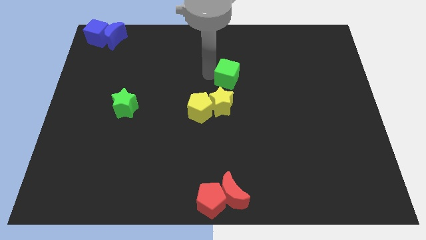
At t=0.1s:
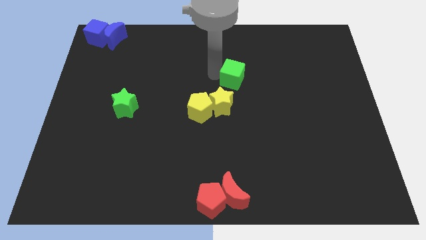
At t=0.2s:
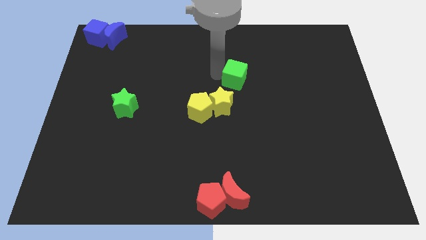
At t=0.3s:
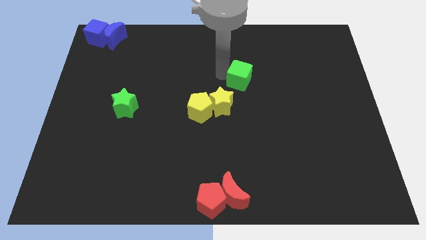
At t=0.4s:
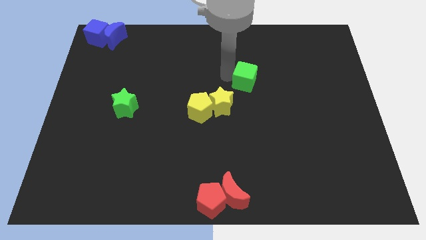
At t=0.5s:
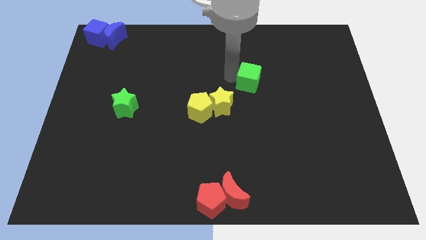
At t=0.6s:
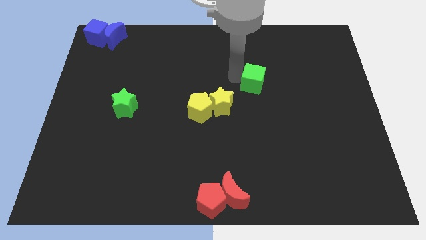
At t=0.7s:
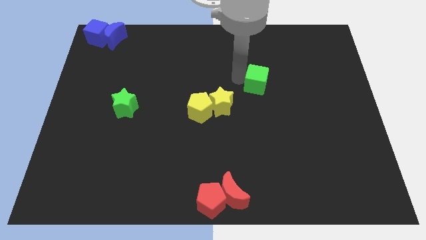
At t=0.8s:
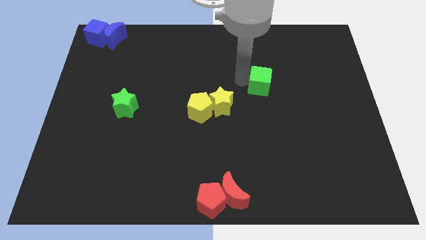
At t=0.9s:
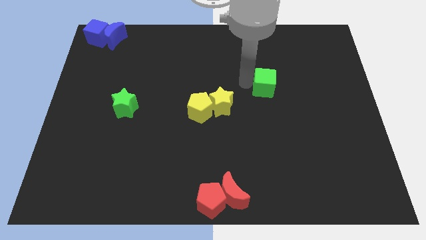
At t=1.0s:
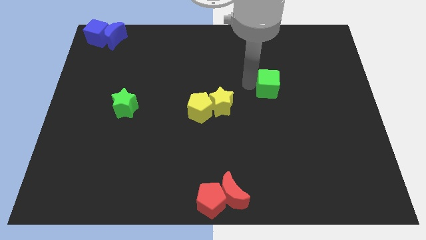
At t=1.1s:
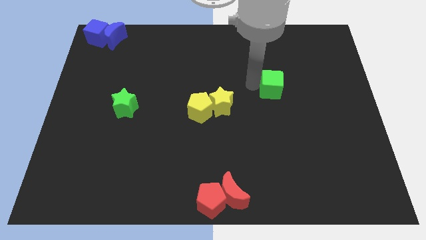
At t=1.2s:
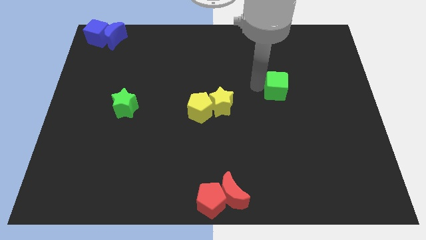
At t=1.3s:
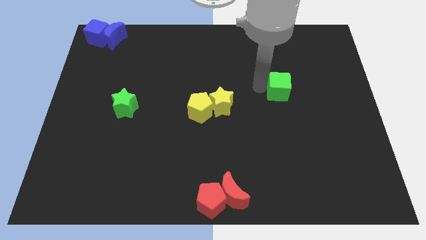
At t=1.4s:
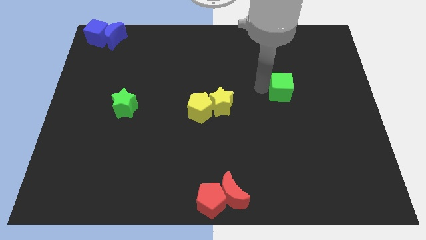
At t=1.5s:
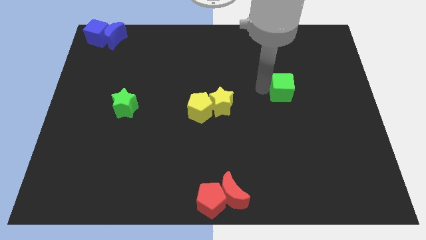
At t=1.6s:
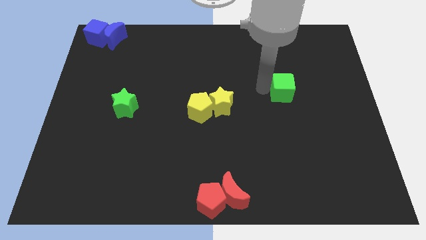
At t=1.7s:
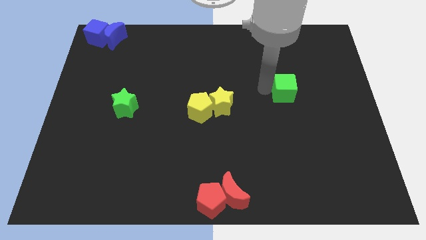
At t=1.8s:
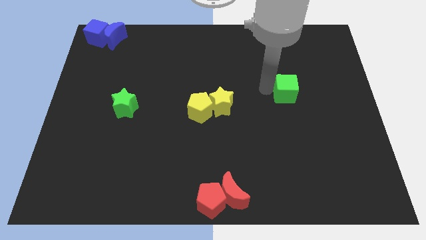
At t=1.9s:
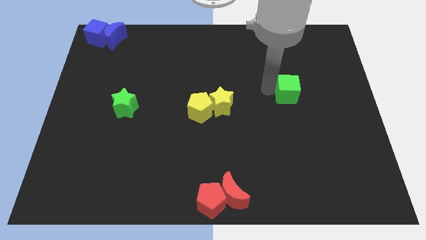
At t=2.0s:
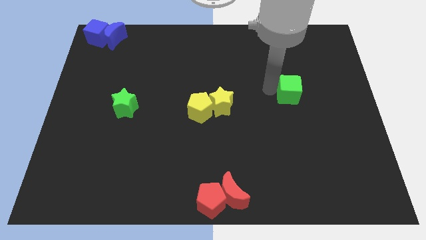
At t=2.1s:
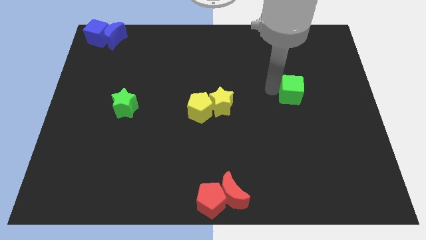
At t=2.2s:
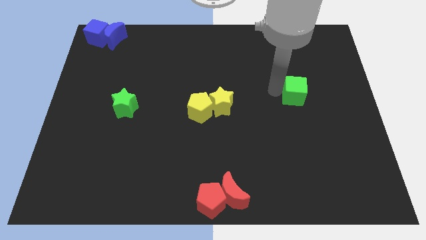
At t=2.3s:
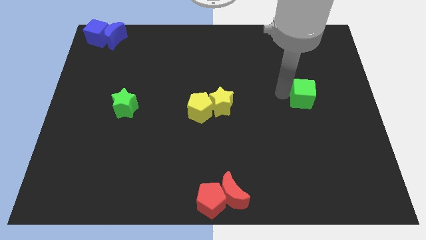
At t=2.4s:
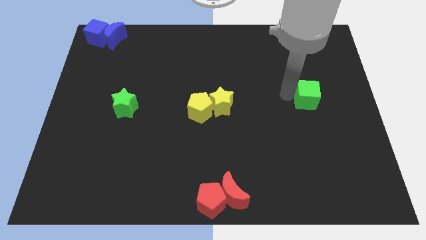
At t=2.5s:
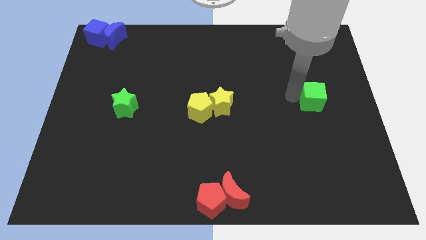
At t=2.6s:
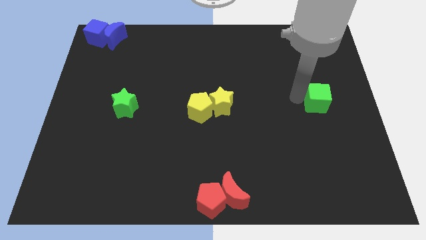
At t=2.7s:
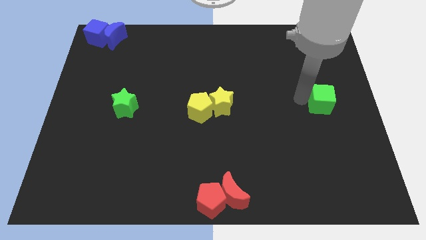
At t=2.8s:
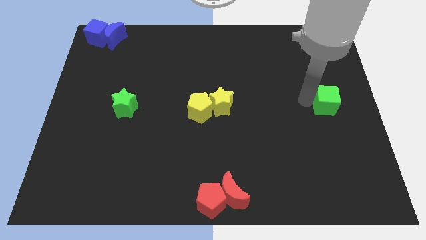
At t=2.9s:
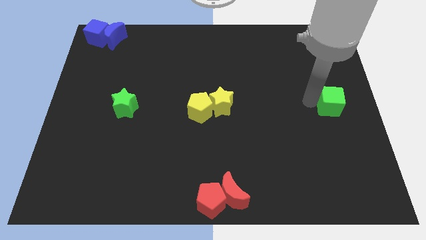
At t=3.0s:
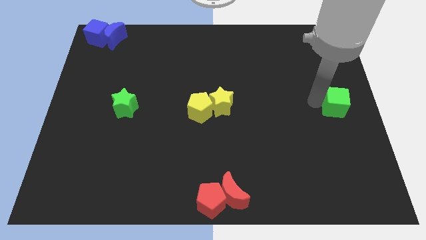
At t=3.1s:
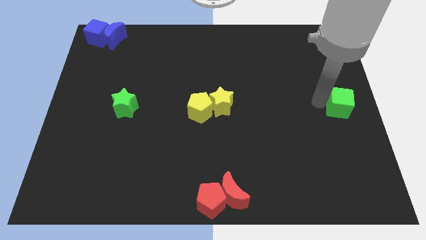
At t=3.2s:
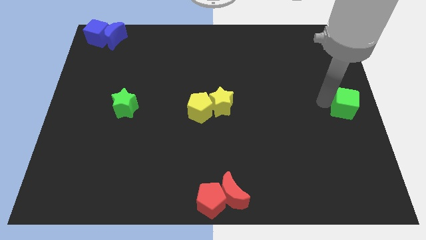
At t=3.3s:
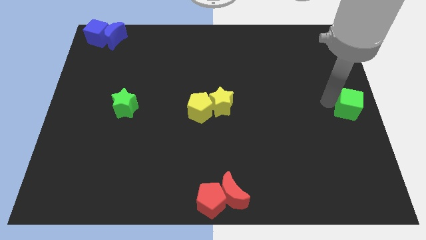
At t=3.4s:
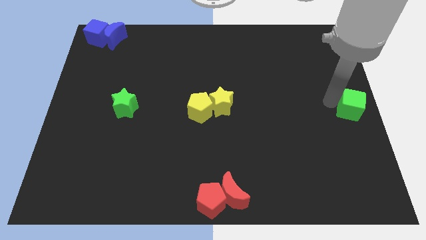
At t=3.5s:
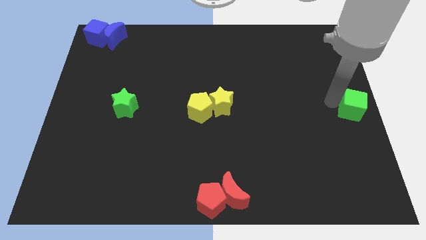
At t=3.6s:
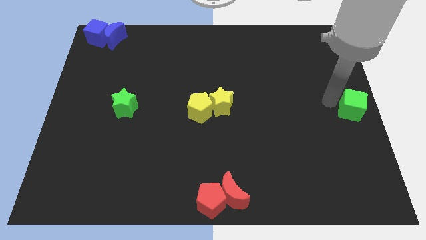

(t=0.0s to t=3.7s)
move the green cube to the right center of the board

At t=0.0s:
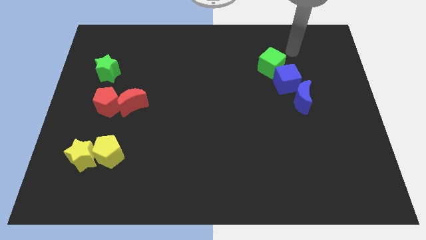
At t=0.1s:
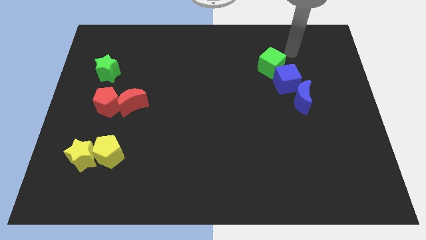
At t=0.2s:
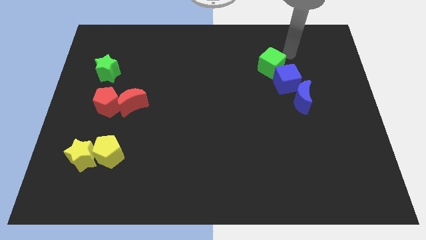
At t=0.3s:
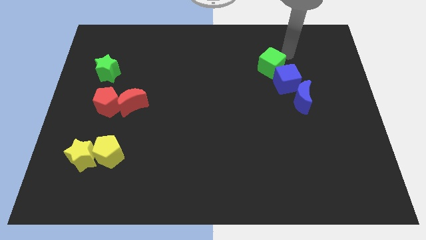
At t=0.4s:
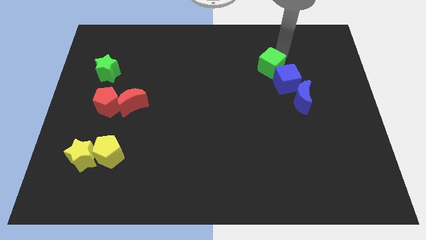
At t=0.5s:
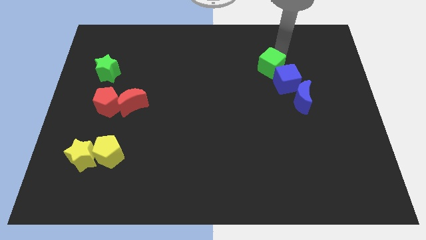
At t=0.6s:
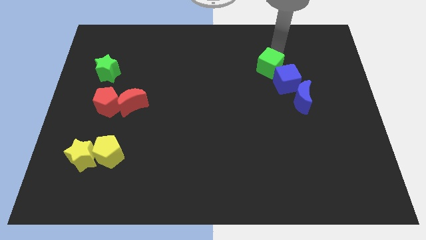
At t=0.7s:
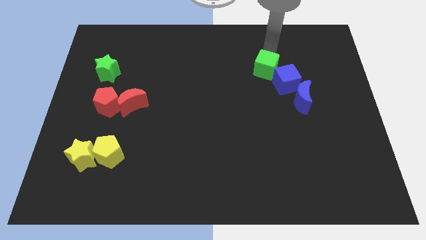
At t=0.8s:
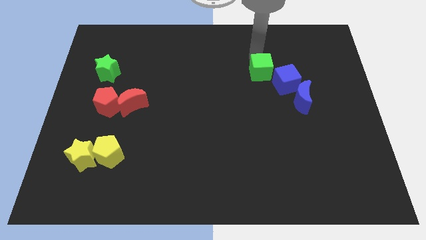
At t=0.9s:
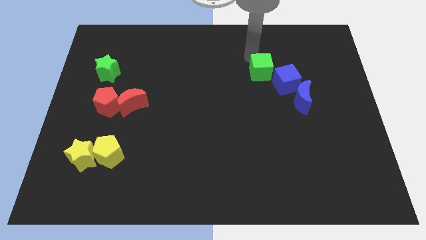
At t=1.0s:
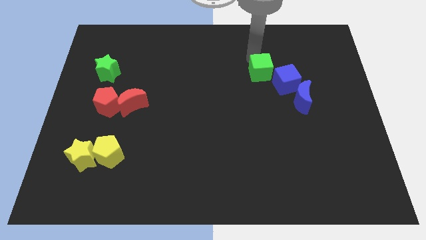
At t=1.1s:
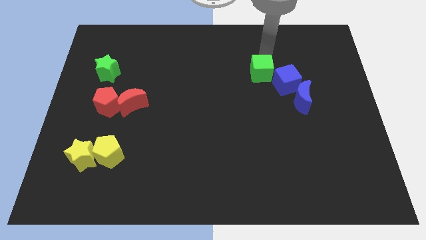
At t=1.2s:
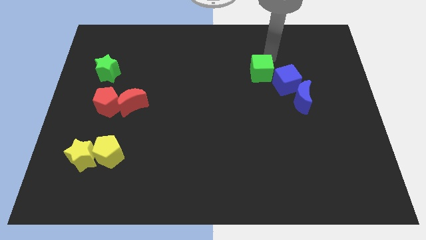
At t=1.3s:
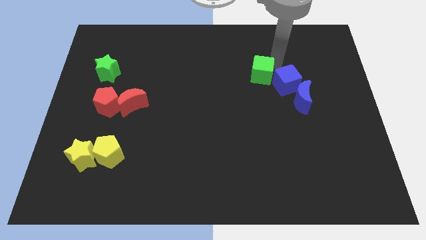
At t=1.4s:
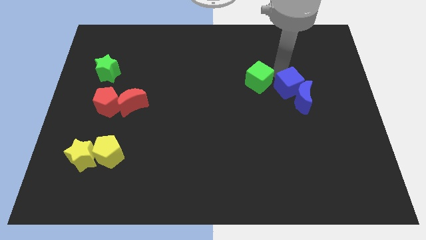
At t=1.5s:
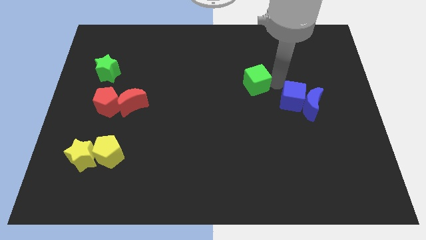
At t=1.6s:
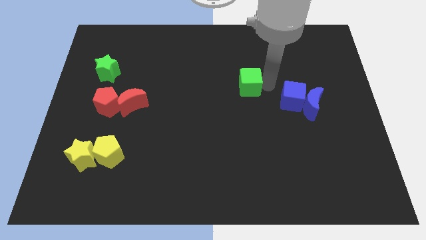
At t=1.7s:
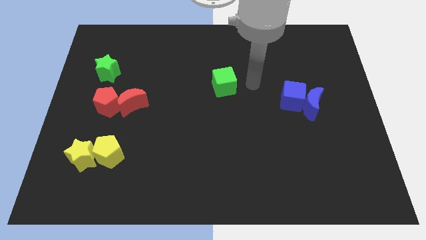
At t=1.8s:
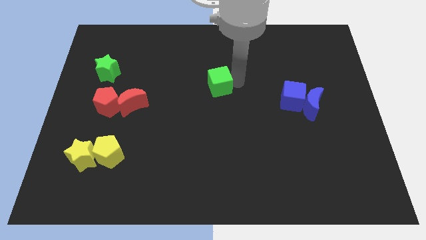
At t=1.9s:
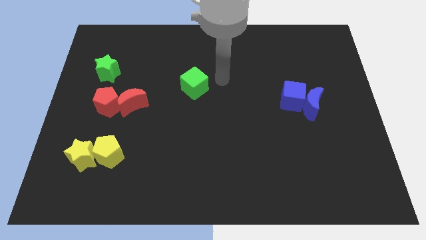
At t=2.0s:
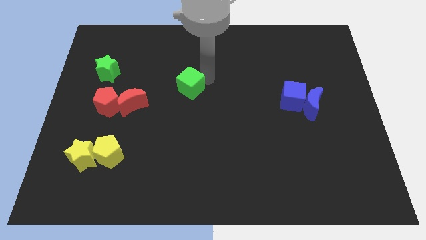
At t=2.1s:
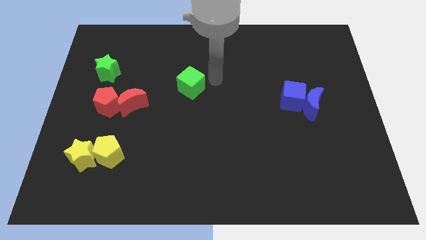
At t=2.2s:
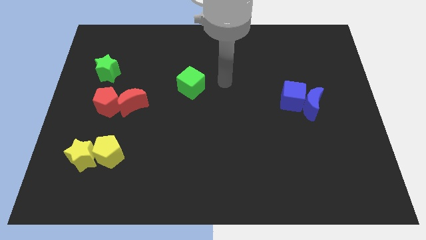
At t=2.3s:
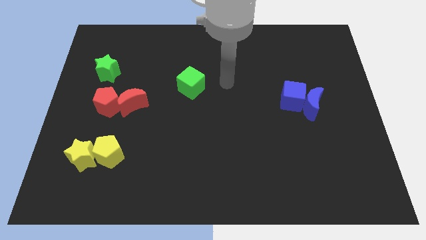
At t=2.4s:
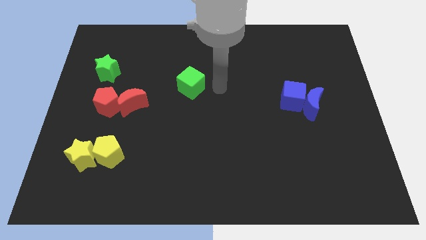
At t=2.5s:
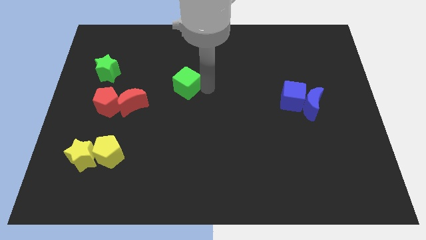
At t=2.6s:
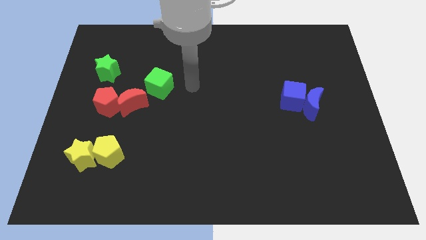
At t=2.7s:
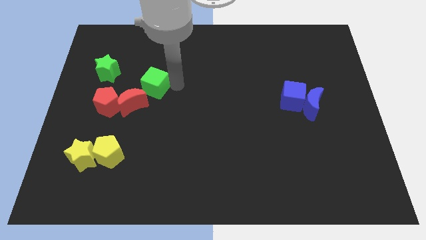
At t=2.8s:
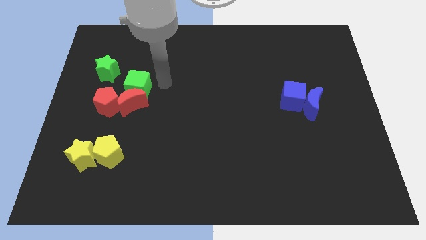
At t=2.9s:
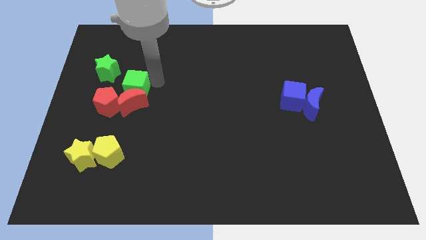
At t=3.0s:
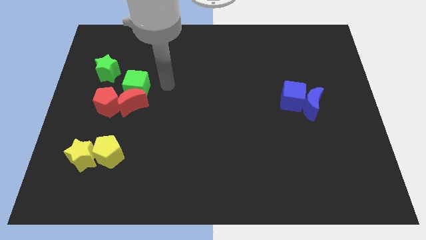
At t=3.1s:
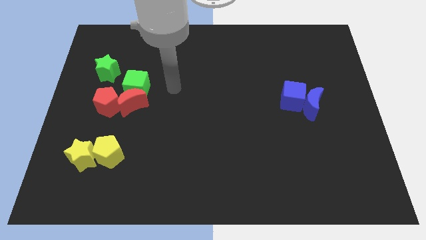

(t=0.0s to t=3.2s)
put the green cube at the top of the red crescent

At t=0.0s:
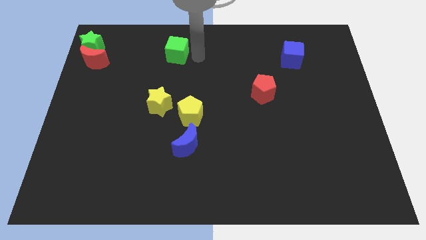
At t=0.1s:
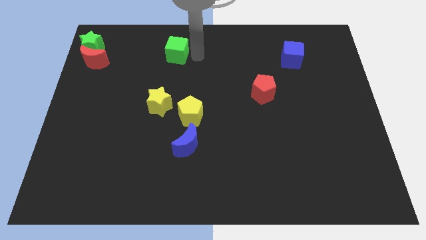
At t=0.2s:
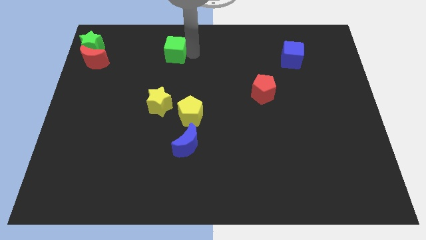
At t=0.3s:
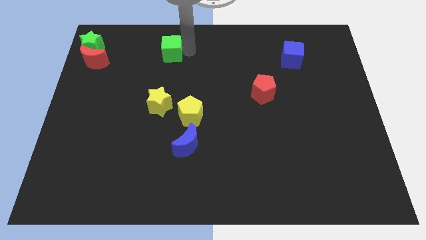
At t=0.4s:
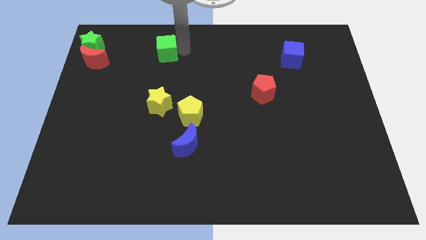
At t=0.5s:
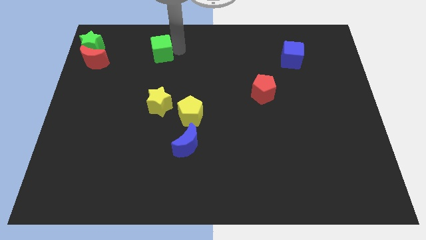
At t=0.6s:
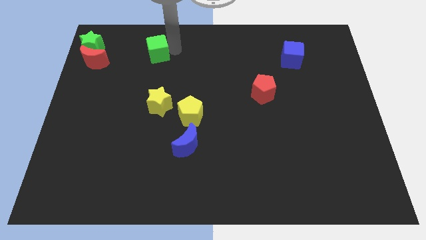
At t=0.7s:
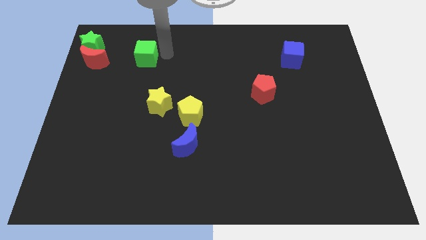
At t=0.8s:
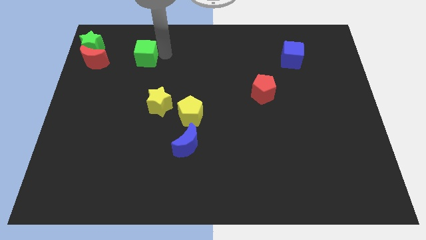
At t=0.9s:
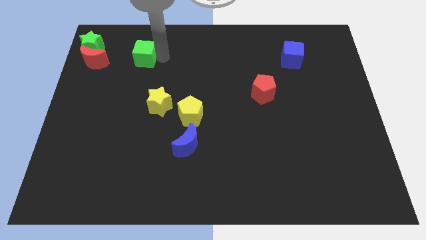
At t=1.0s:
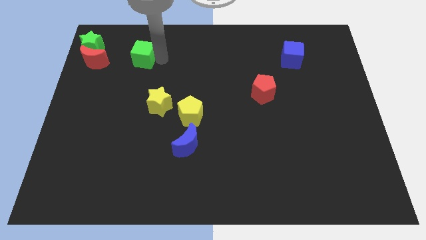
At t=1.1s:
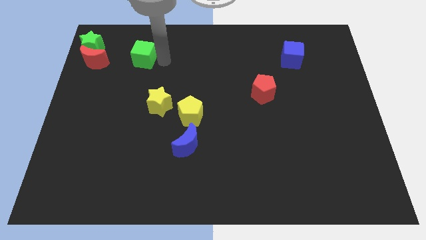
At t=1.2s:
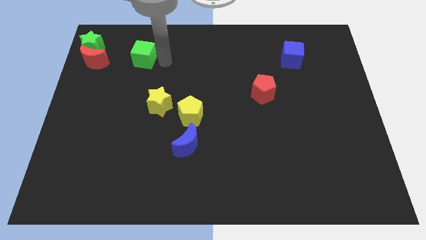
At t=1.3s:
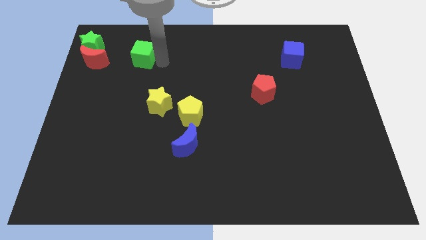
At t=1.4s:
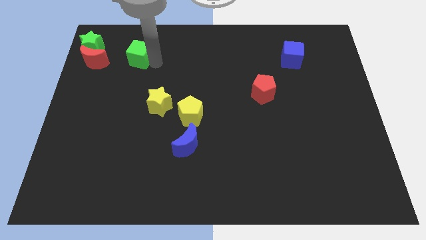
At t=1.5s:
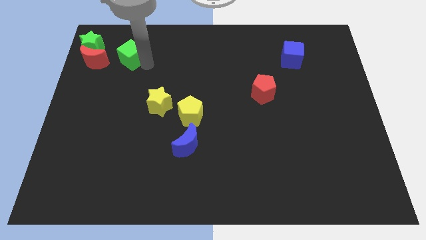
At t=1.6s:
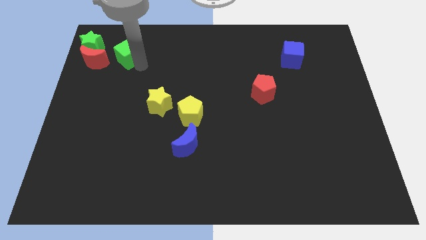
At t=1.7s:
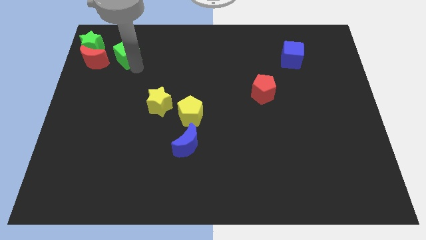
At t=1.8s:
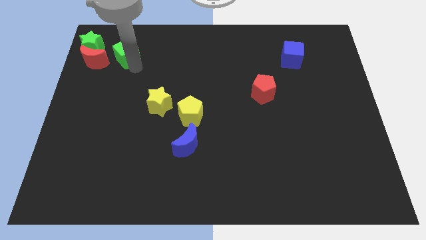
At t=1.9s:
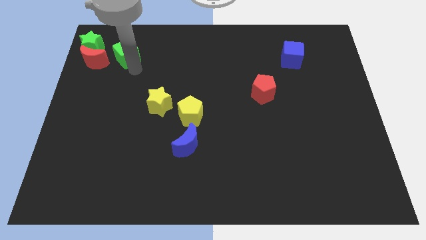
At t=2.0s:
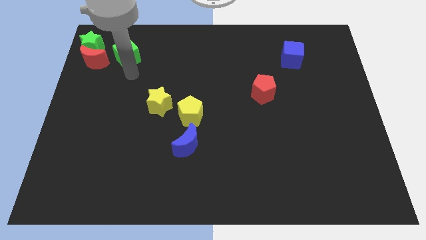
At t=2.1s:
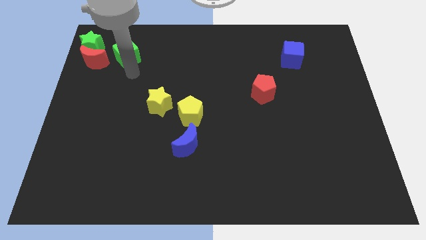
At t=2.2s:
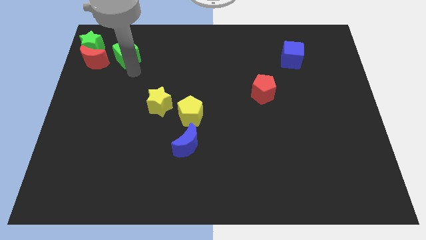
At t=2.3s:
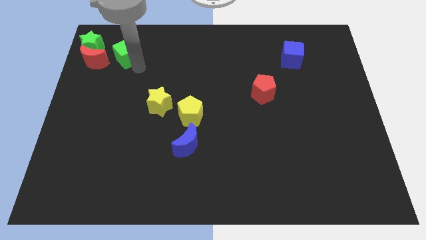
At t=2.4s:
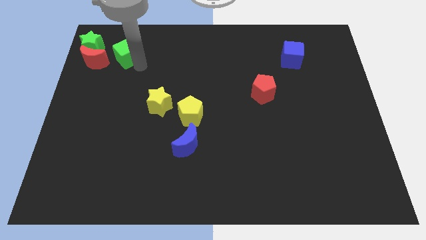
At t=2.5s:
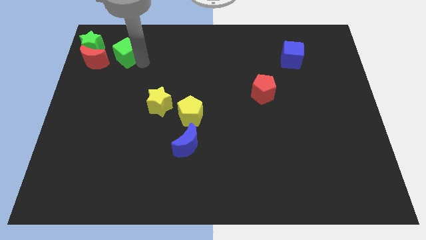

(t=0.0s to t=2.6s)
place the green cube right to the red moon
